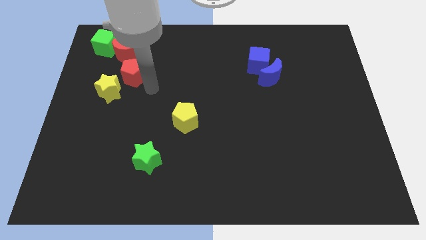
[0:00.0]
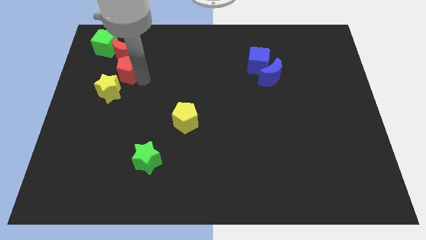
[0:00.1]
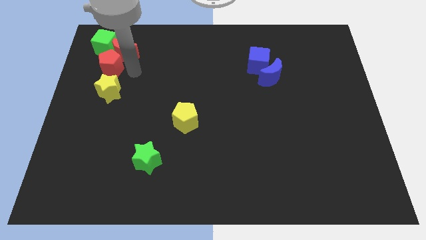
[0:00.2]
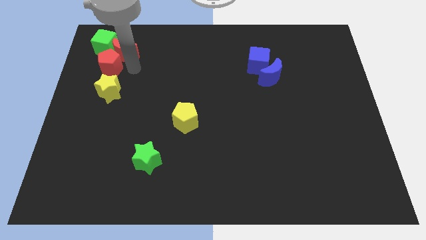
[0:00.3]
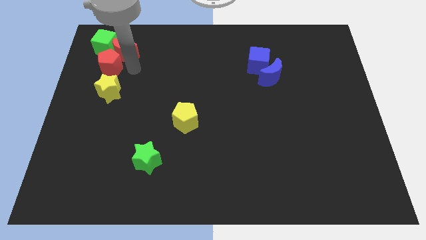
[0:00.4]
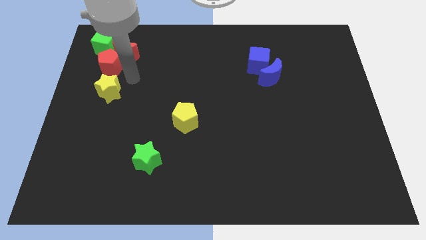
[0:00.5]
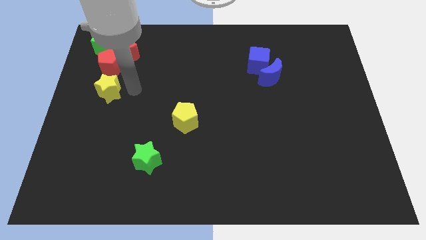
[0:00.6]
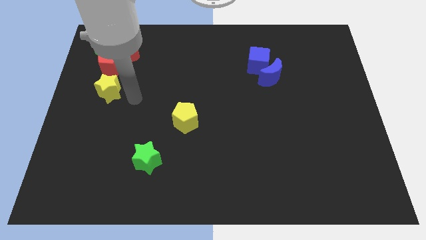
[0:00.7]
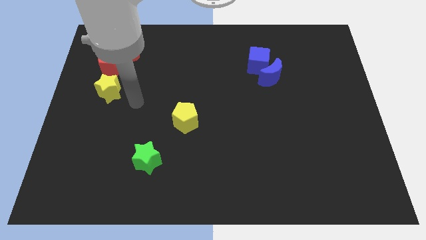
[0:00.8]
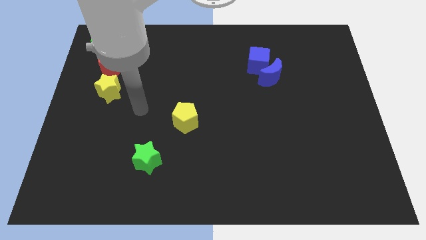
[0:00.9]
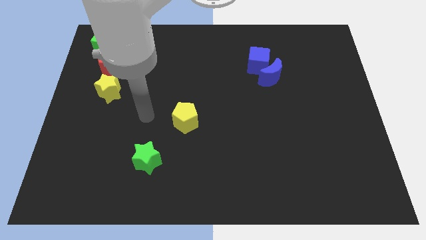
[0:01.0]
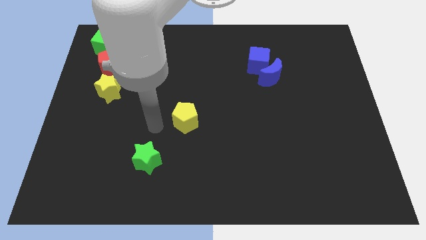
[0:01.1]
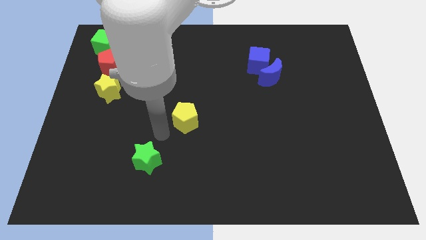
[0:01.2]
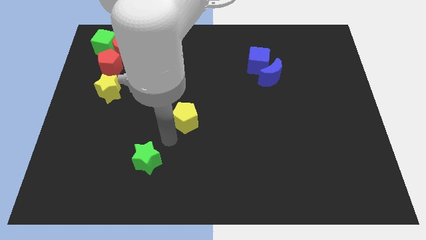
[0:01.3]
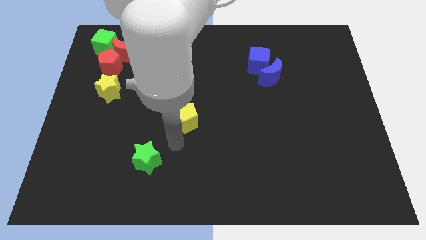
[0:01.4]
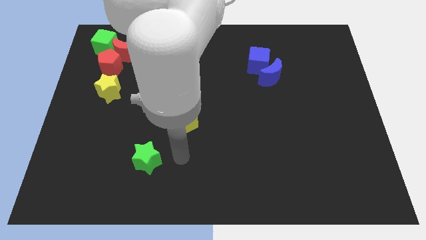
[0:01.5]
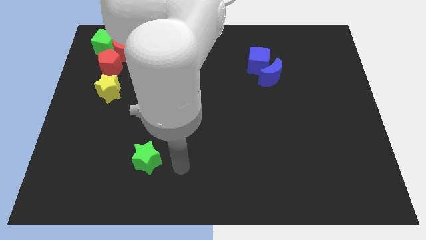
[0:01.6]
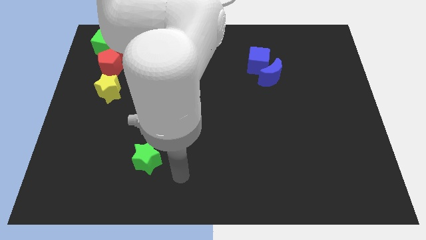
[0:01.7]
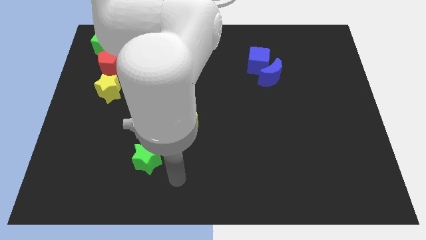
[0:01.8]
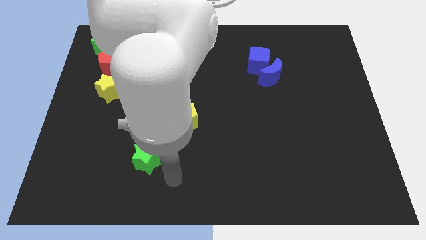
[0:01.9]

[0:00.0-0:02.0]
move the red pentagon to the bottom right of green cube

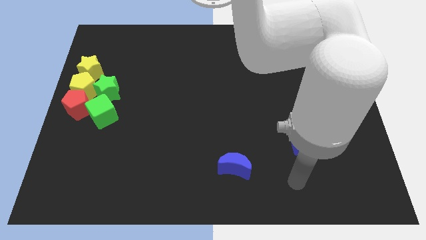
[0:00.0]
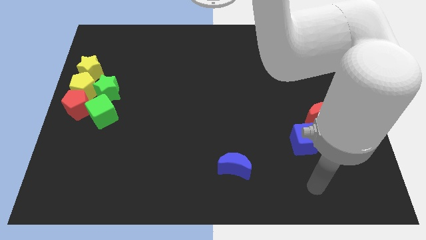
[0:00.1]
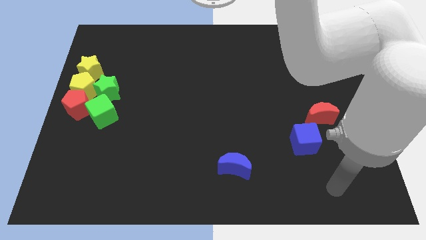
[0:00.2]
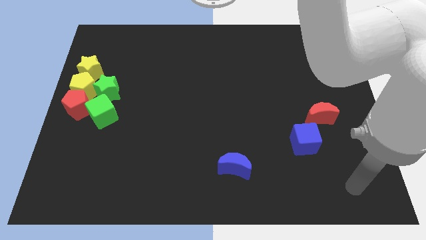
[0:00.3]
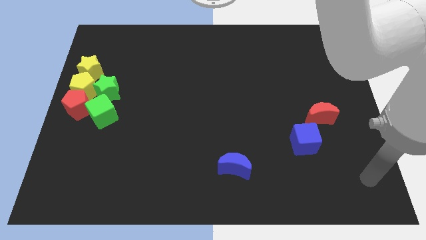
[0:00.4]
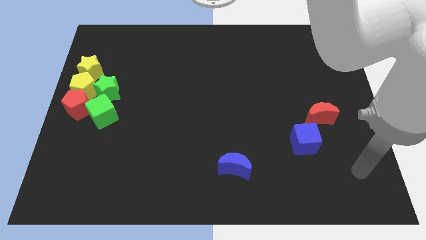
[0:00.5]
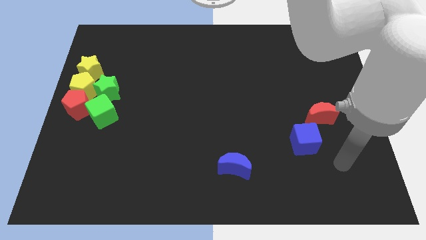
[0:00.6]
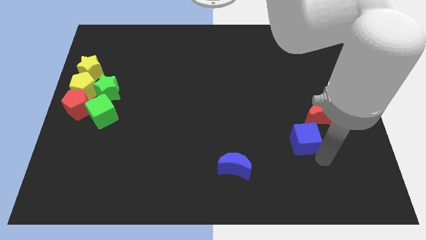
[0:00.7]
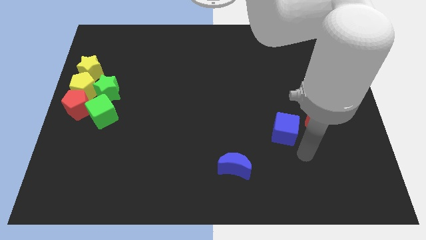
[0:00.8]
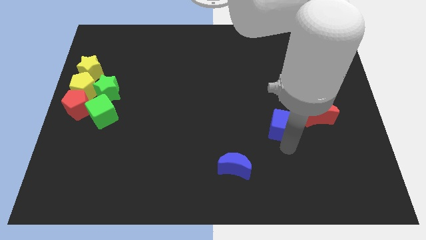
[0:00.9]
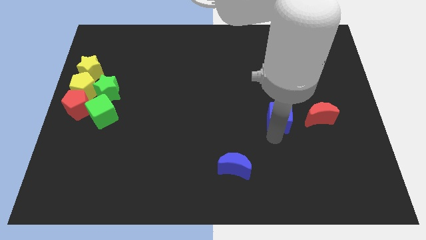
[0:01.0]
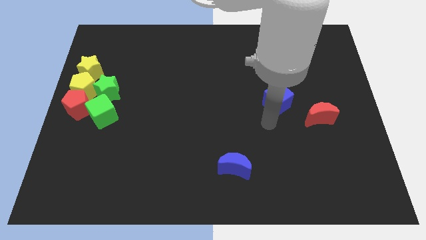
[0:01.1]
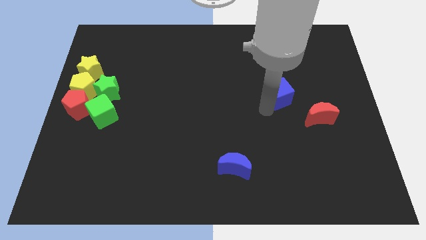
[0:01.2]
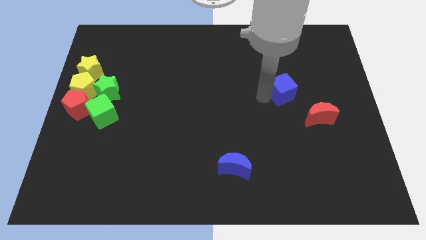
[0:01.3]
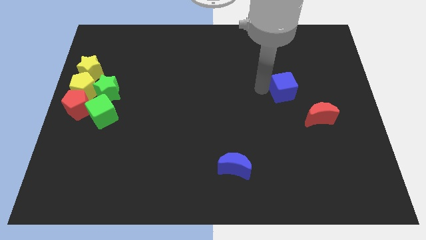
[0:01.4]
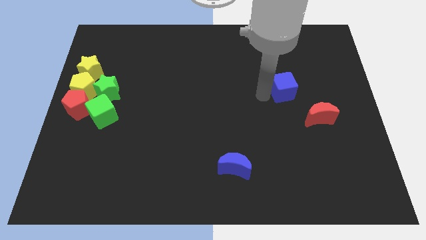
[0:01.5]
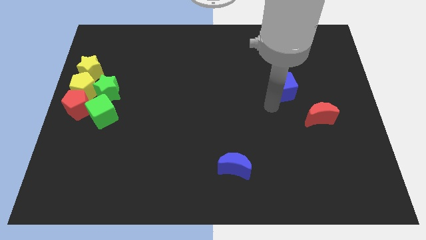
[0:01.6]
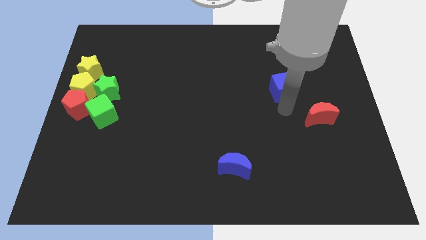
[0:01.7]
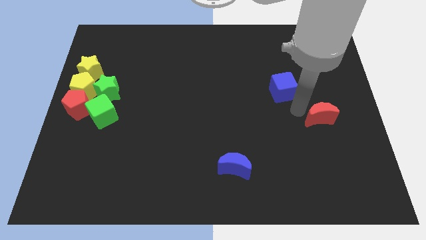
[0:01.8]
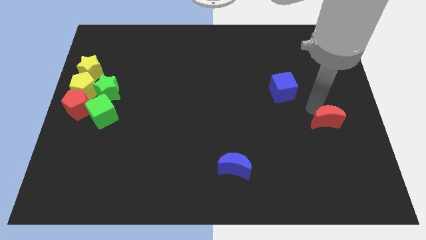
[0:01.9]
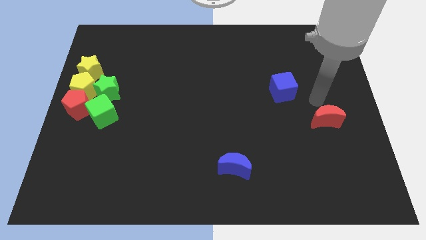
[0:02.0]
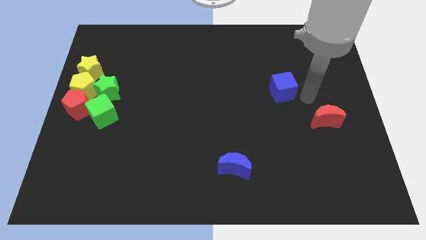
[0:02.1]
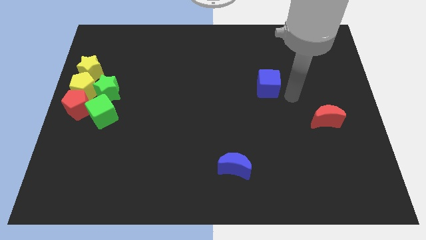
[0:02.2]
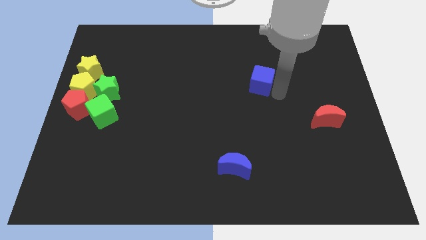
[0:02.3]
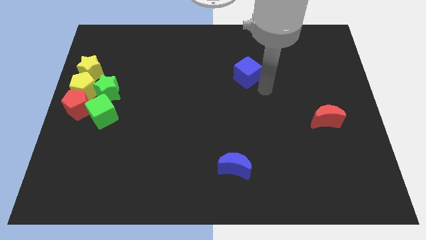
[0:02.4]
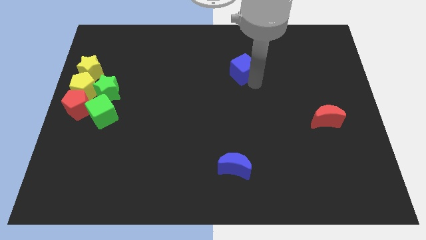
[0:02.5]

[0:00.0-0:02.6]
move blue cube vertically above blue moon

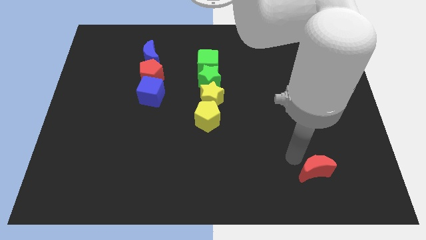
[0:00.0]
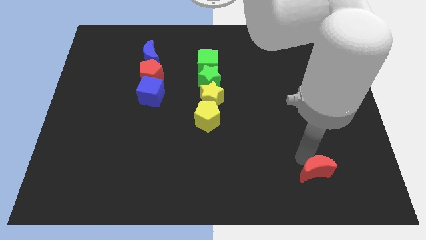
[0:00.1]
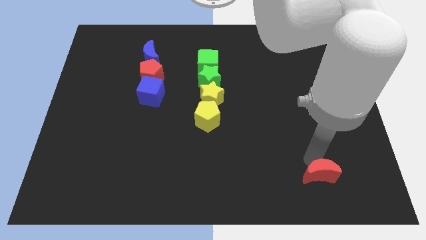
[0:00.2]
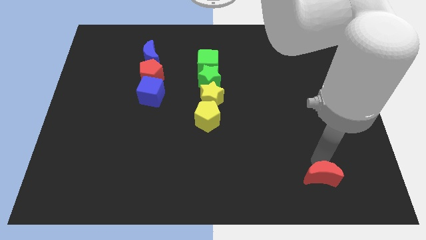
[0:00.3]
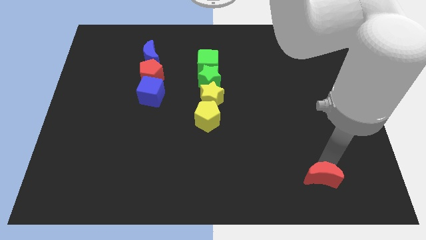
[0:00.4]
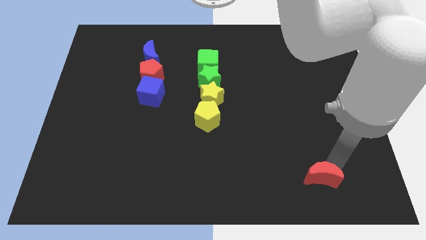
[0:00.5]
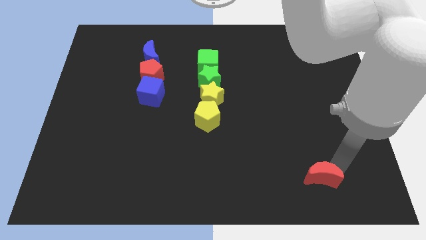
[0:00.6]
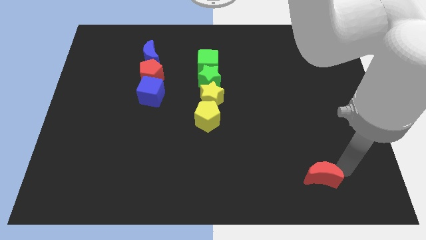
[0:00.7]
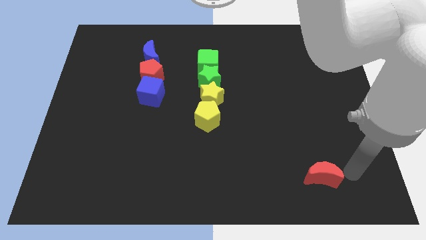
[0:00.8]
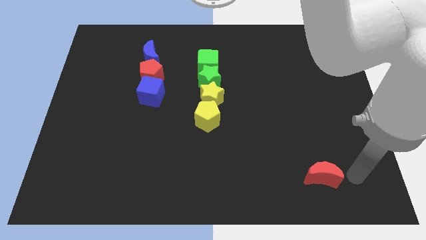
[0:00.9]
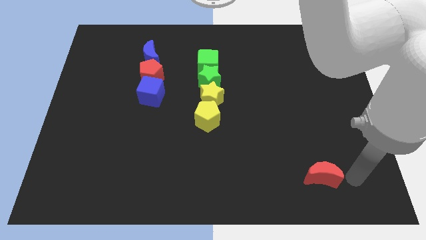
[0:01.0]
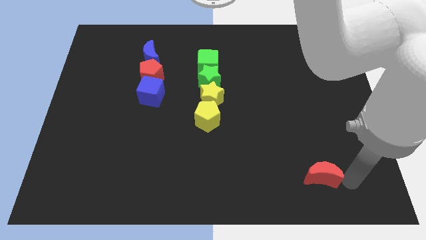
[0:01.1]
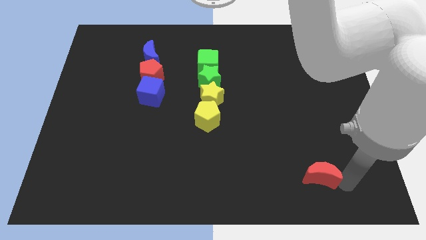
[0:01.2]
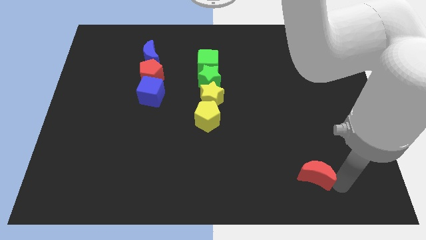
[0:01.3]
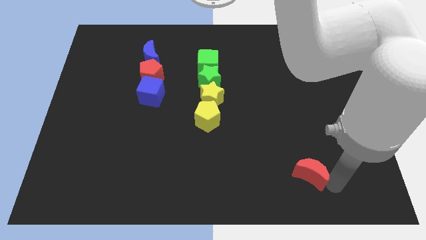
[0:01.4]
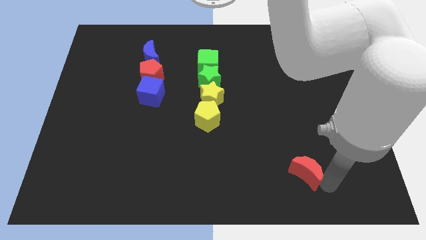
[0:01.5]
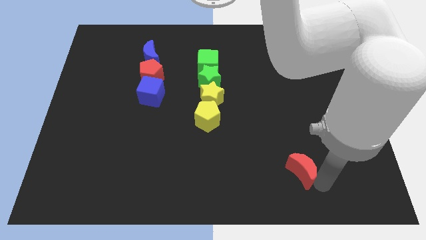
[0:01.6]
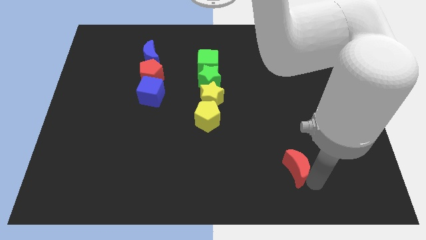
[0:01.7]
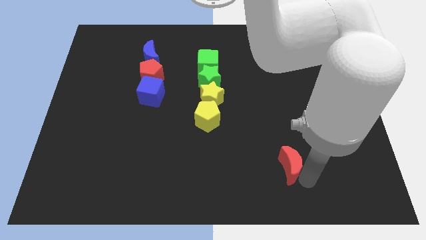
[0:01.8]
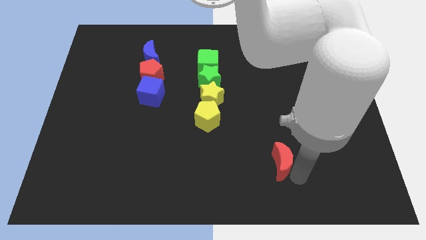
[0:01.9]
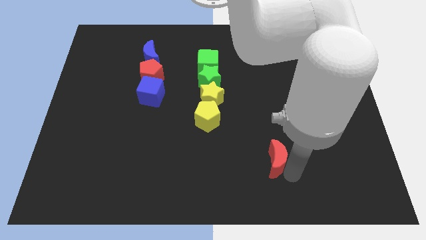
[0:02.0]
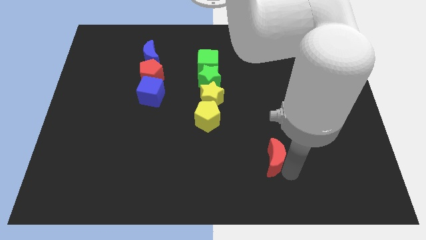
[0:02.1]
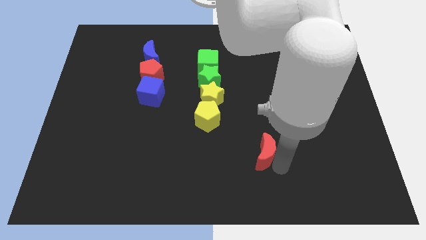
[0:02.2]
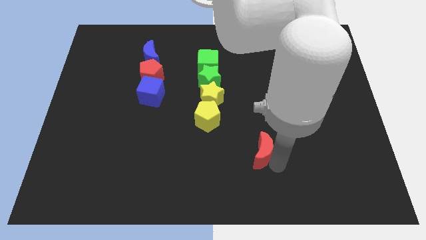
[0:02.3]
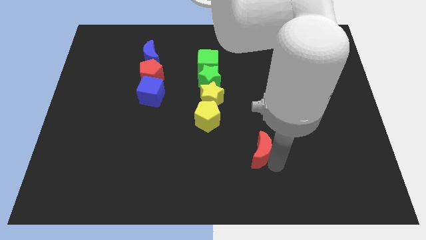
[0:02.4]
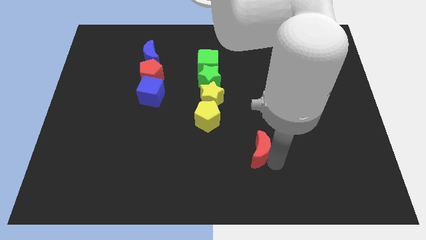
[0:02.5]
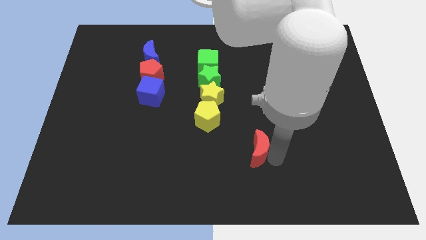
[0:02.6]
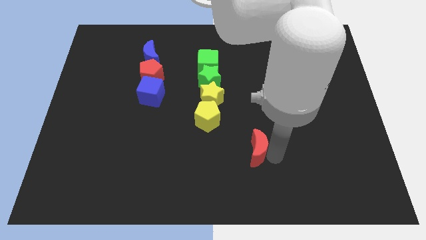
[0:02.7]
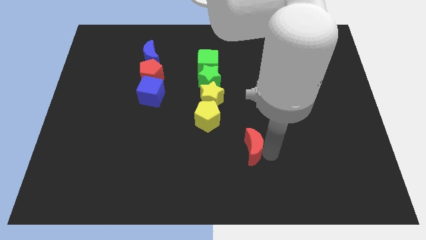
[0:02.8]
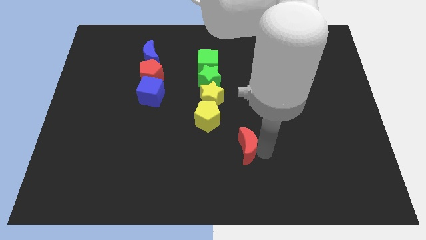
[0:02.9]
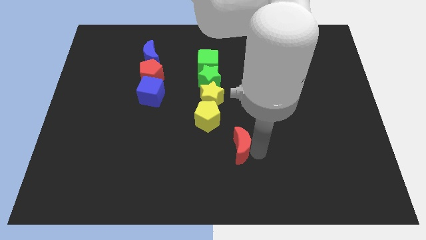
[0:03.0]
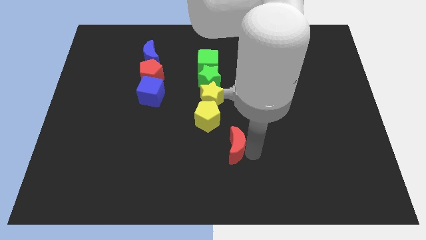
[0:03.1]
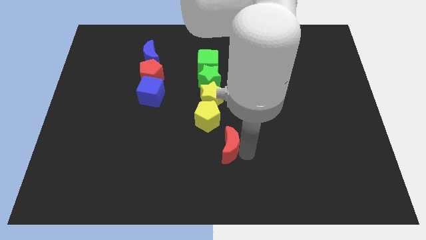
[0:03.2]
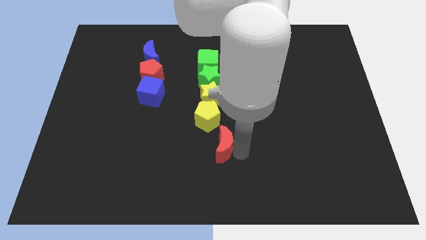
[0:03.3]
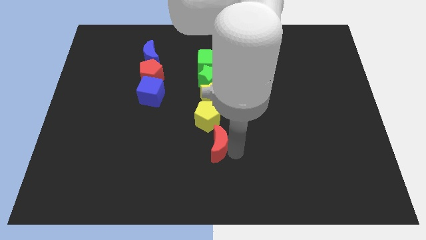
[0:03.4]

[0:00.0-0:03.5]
push the red crescent to the left

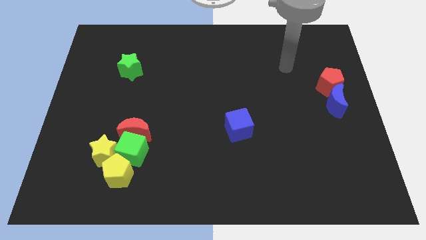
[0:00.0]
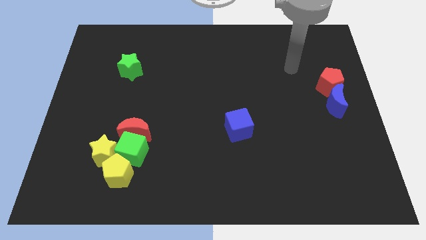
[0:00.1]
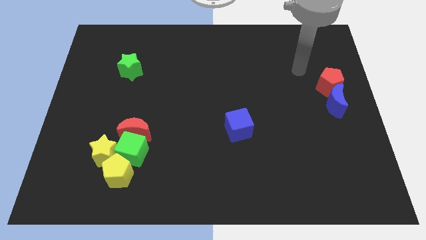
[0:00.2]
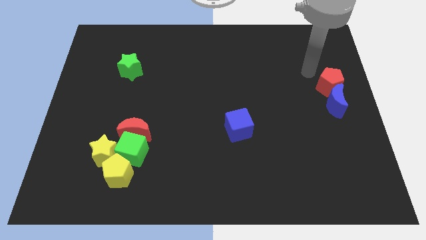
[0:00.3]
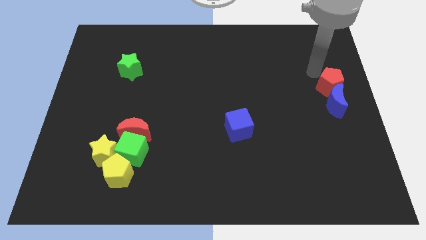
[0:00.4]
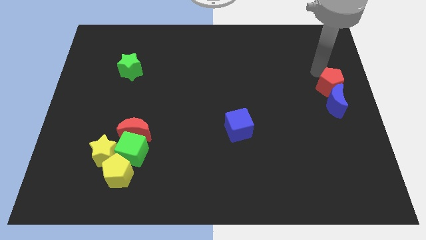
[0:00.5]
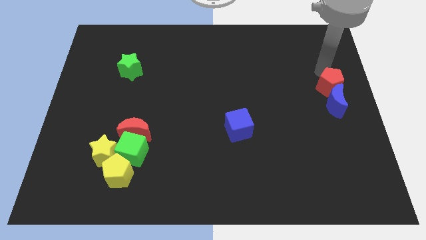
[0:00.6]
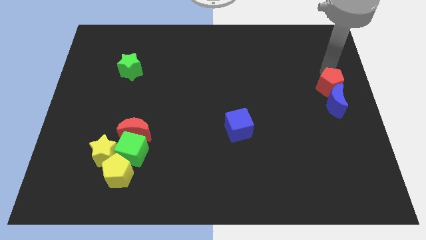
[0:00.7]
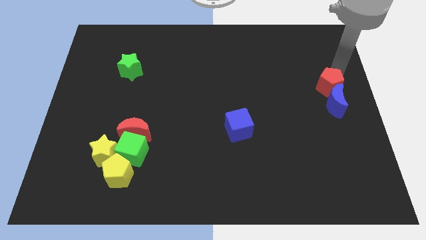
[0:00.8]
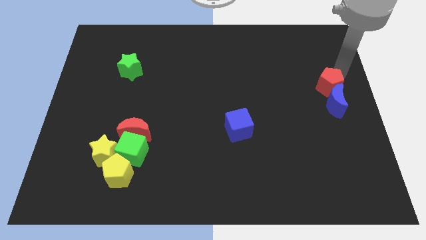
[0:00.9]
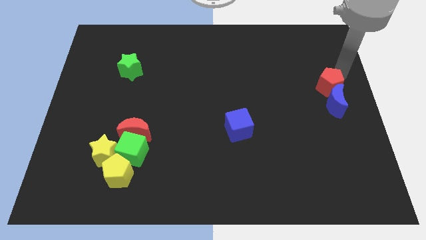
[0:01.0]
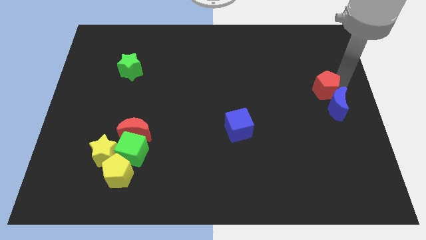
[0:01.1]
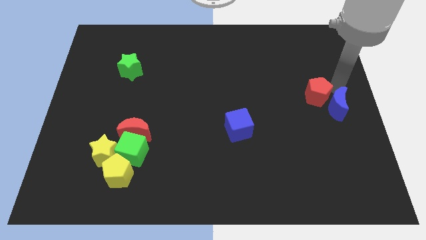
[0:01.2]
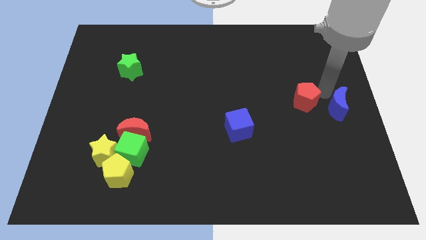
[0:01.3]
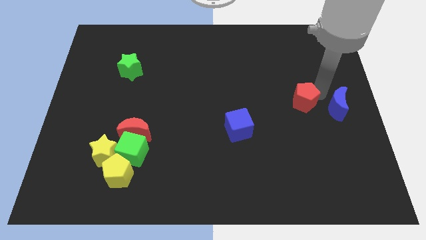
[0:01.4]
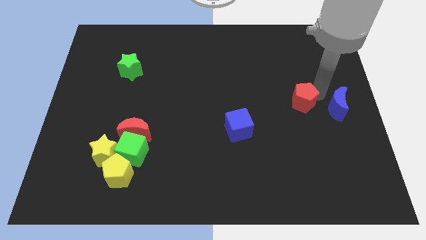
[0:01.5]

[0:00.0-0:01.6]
separate red pentagon and the blue moon
